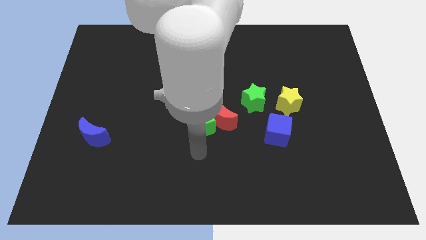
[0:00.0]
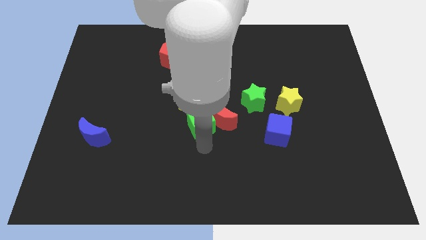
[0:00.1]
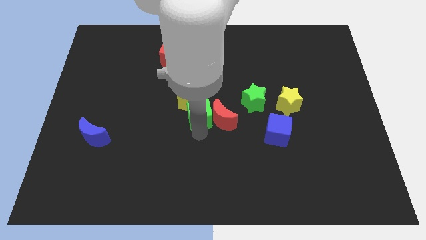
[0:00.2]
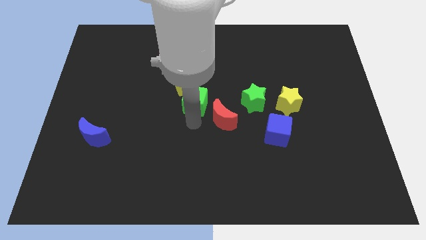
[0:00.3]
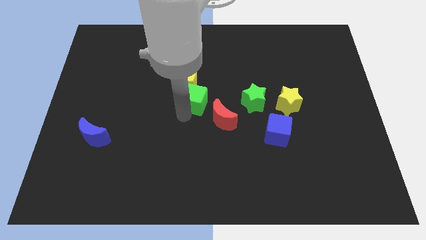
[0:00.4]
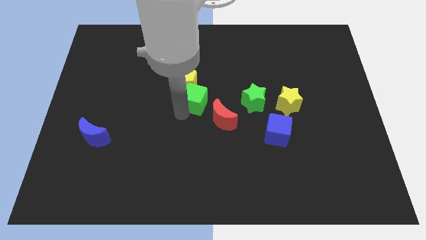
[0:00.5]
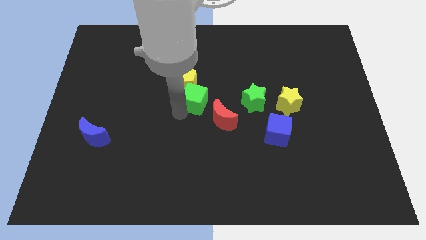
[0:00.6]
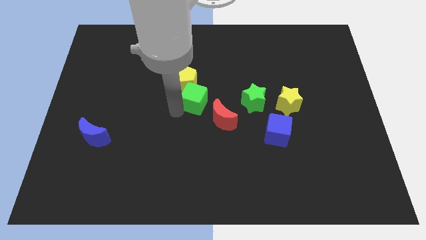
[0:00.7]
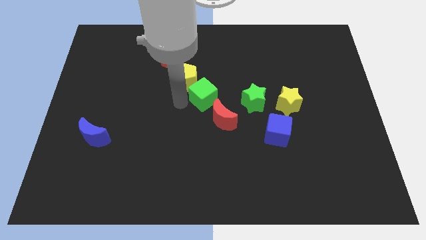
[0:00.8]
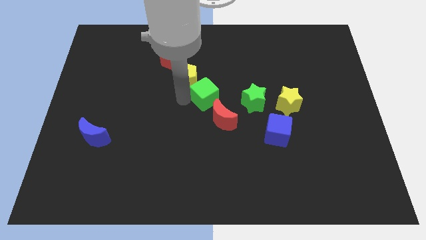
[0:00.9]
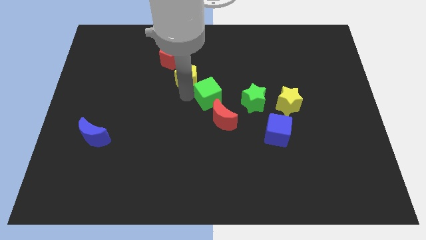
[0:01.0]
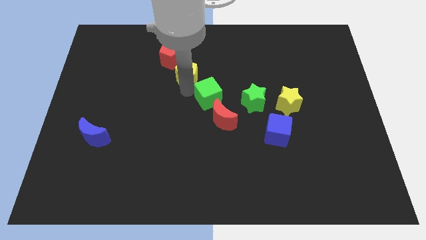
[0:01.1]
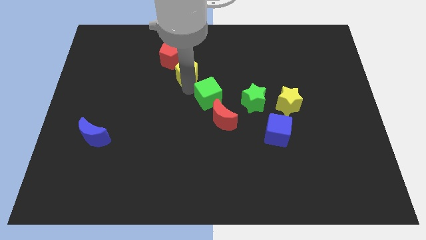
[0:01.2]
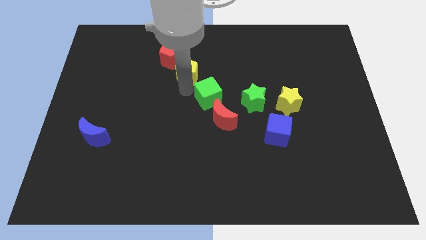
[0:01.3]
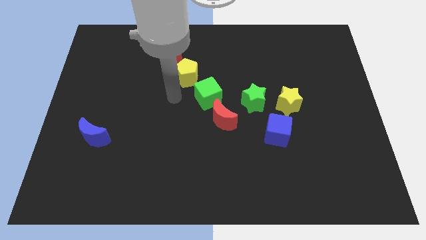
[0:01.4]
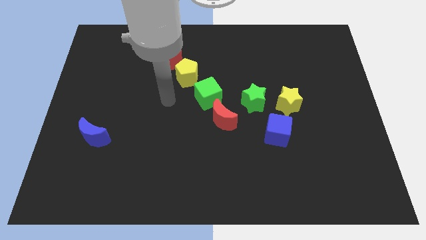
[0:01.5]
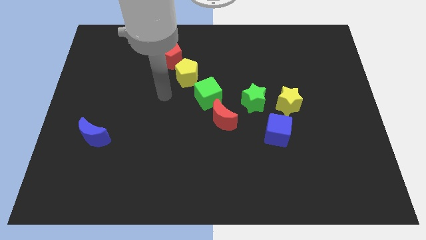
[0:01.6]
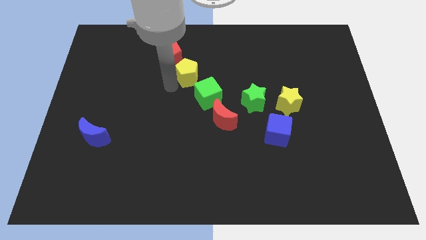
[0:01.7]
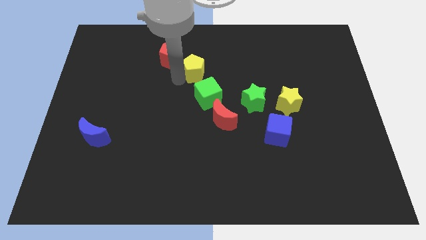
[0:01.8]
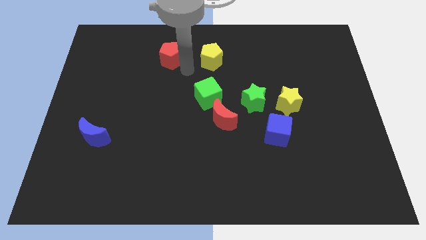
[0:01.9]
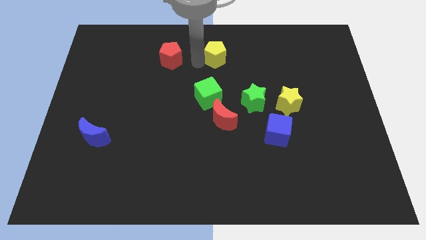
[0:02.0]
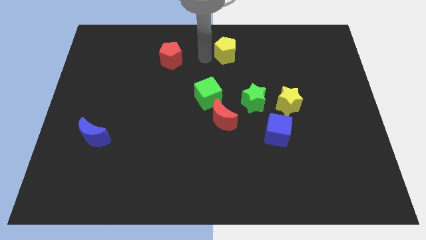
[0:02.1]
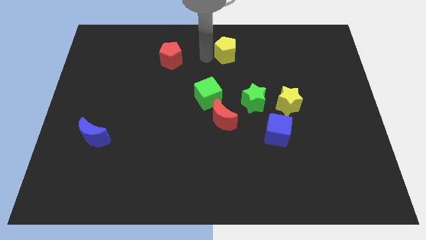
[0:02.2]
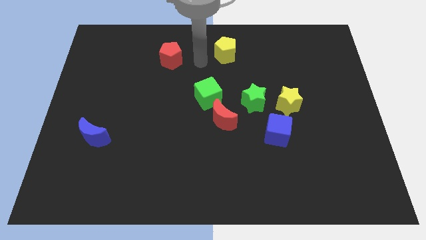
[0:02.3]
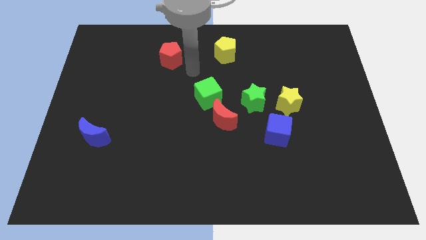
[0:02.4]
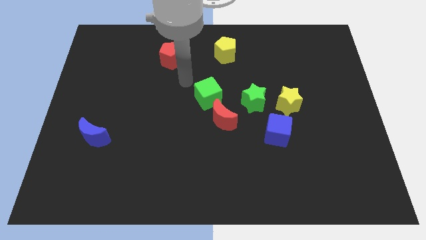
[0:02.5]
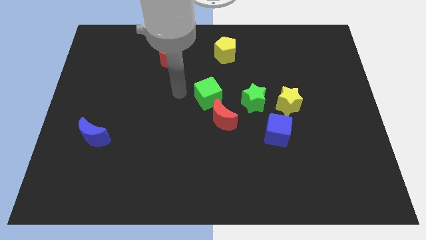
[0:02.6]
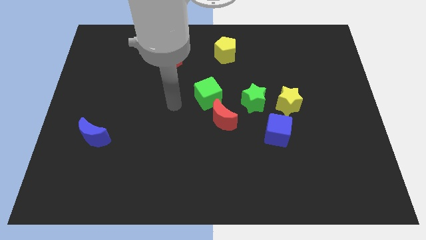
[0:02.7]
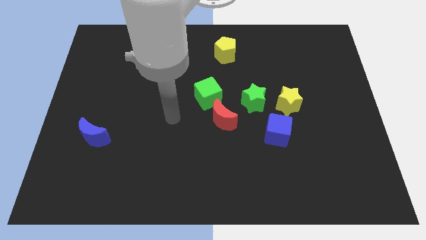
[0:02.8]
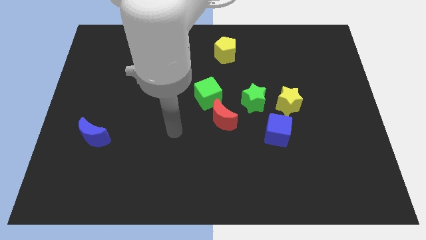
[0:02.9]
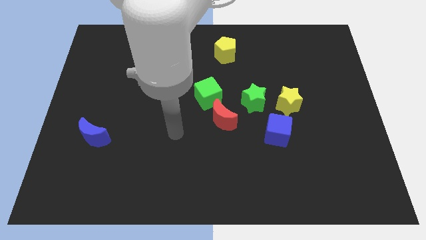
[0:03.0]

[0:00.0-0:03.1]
push the yellow pentagon to the right of the red pentagon

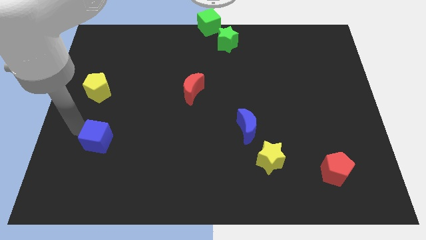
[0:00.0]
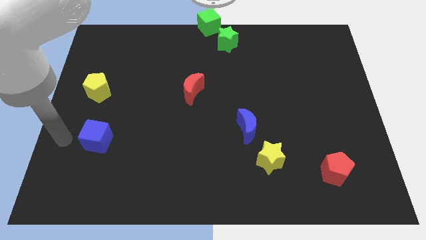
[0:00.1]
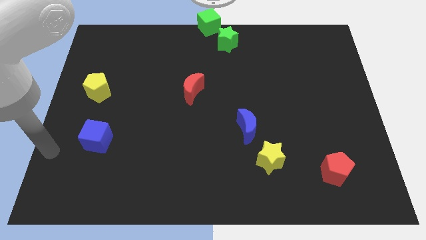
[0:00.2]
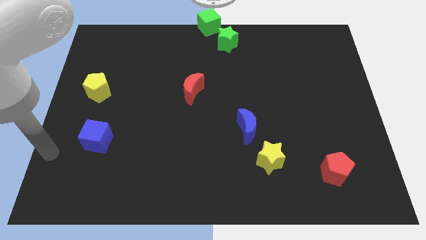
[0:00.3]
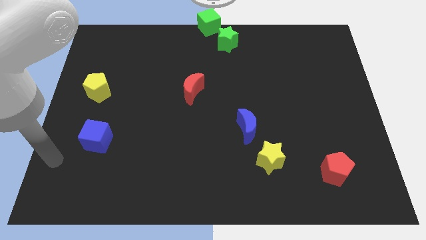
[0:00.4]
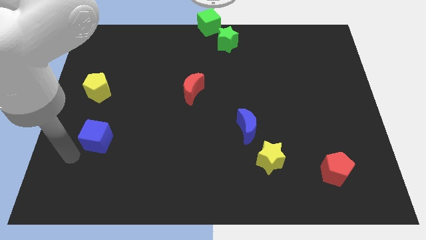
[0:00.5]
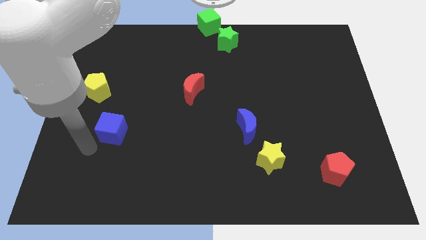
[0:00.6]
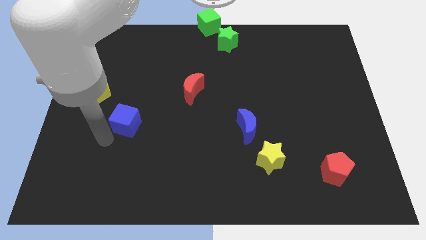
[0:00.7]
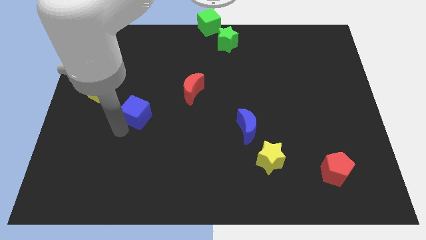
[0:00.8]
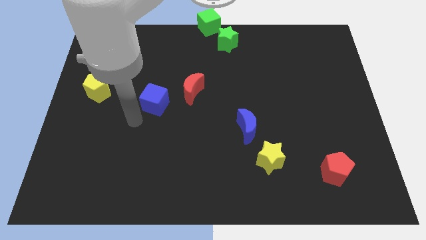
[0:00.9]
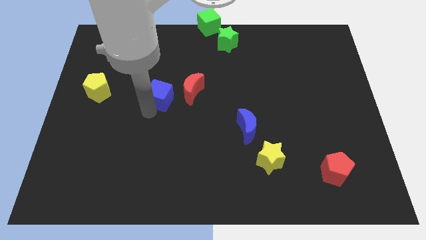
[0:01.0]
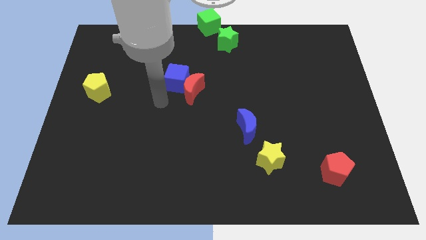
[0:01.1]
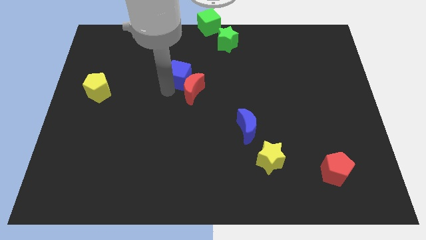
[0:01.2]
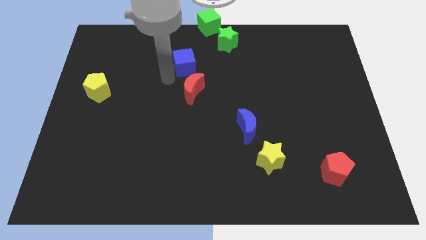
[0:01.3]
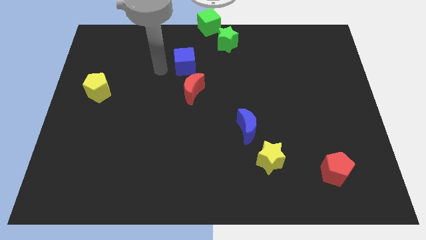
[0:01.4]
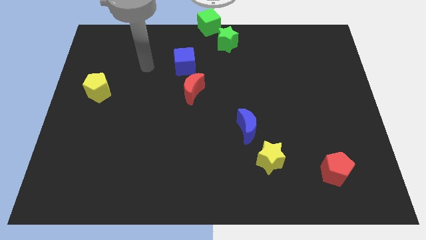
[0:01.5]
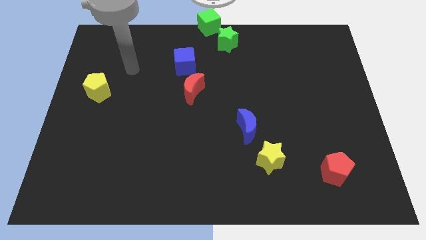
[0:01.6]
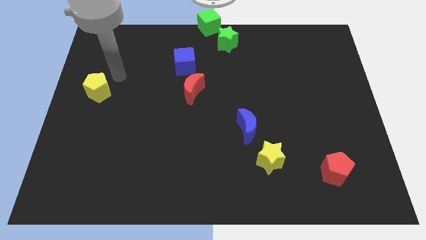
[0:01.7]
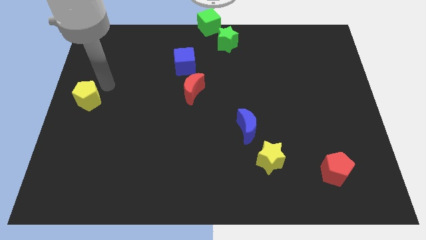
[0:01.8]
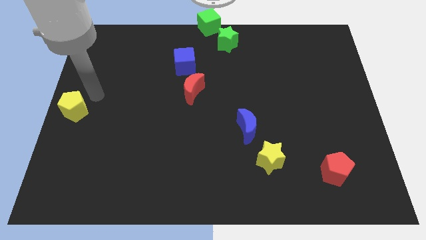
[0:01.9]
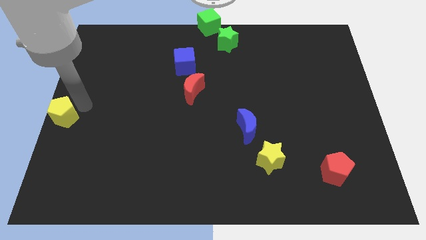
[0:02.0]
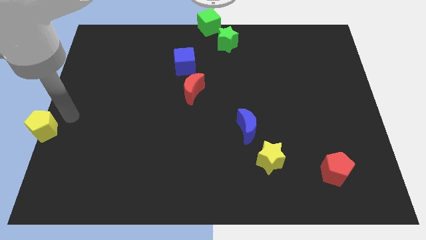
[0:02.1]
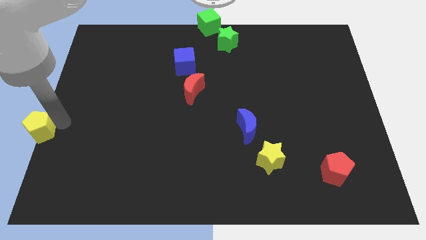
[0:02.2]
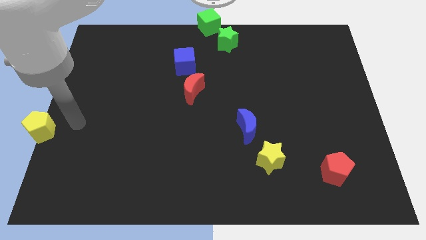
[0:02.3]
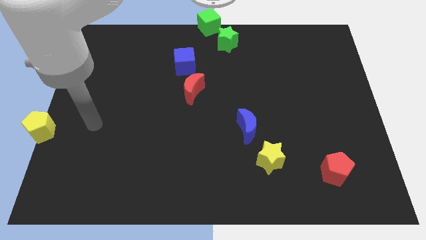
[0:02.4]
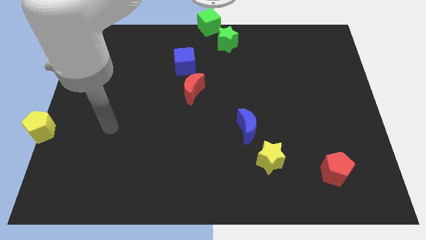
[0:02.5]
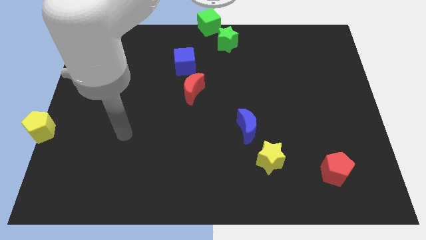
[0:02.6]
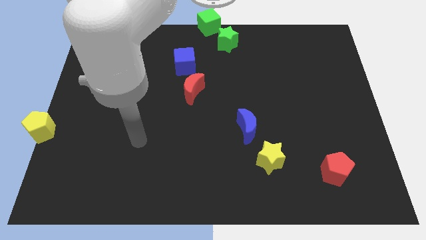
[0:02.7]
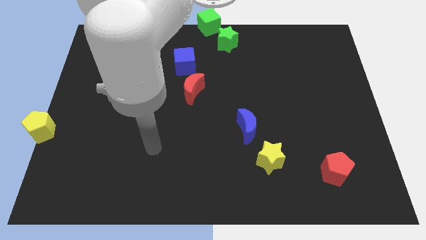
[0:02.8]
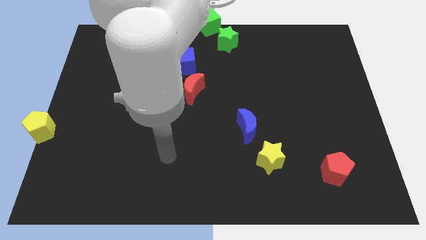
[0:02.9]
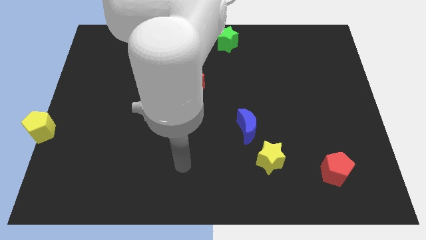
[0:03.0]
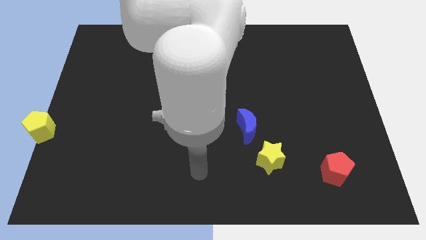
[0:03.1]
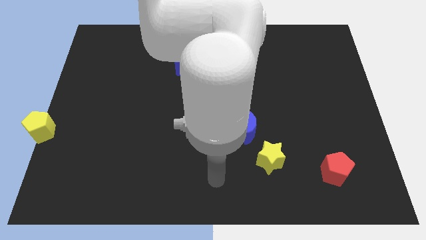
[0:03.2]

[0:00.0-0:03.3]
place the blue cube to the top left of red moon

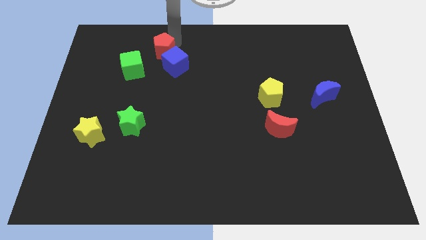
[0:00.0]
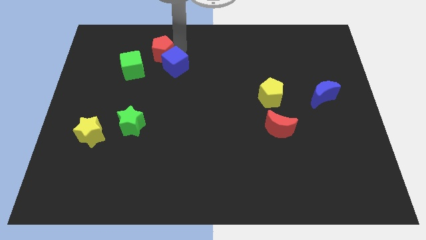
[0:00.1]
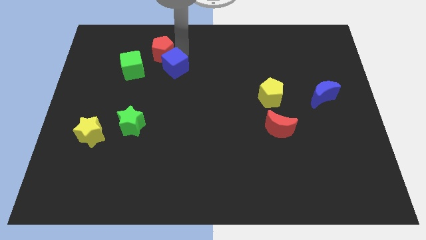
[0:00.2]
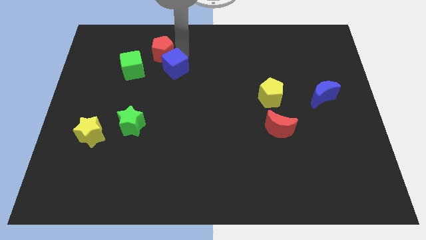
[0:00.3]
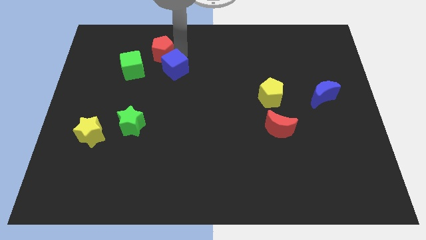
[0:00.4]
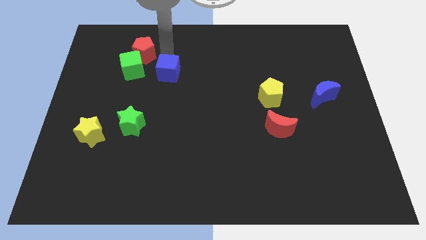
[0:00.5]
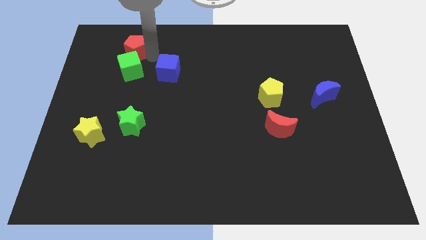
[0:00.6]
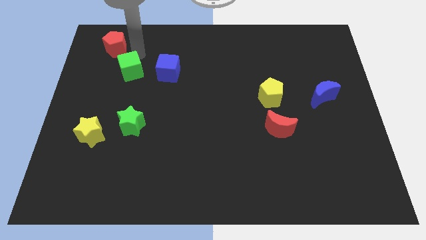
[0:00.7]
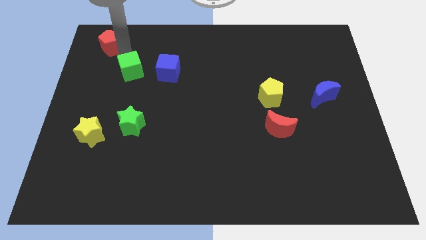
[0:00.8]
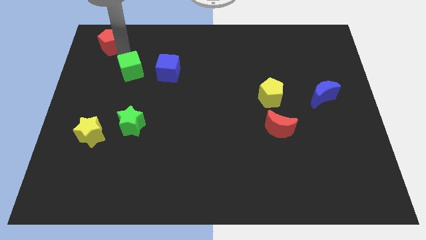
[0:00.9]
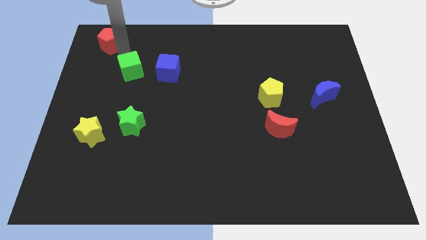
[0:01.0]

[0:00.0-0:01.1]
separate red pentagon and blue cube

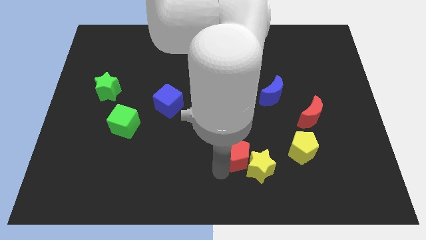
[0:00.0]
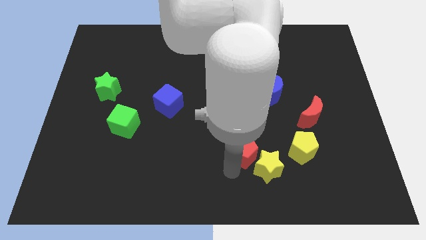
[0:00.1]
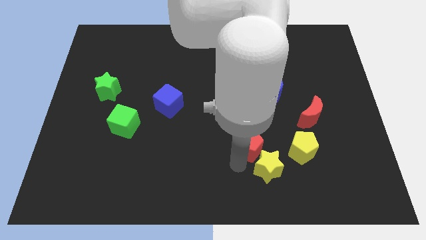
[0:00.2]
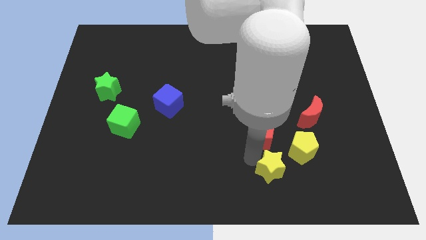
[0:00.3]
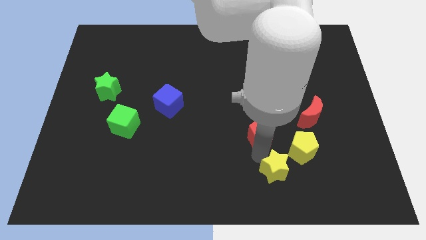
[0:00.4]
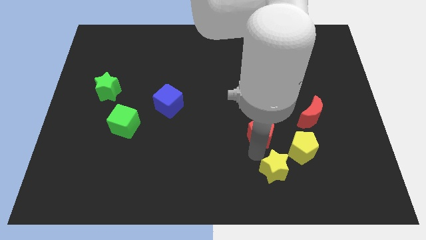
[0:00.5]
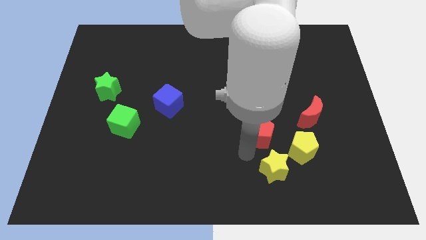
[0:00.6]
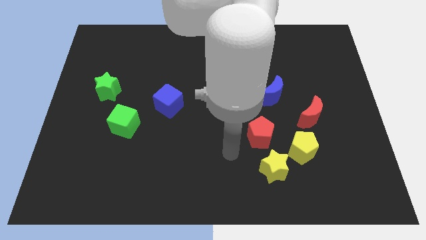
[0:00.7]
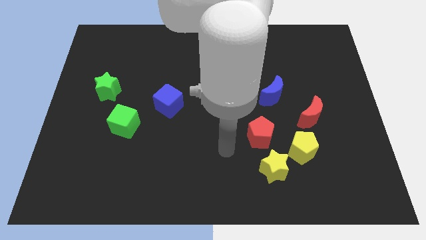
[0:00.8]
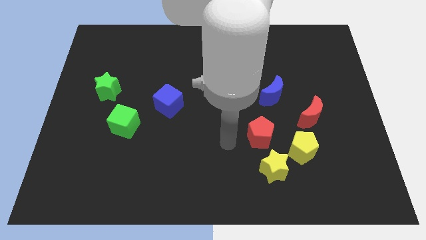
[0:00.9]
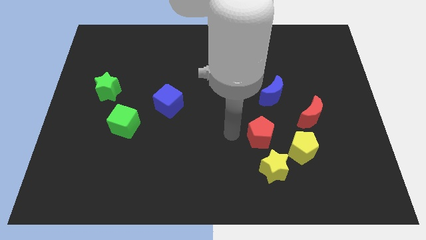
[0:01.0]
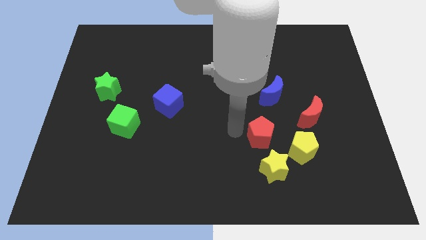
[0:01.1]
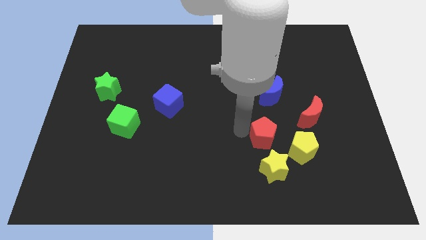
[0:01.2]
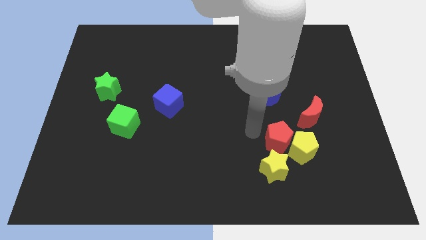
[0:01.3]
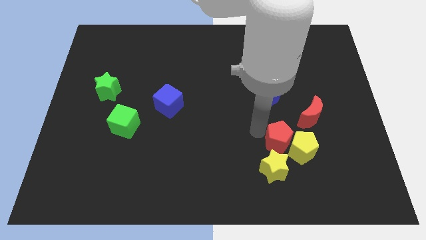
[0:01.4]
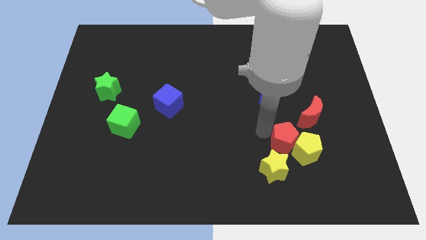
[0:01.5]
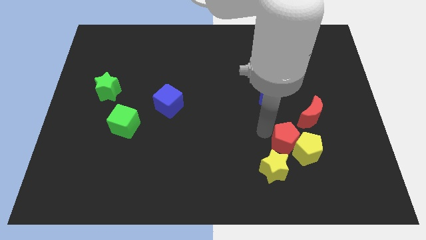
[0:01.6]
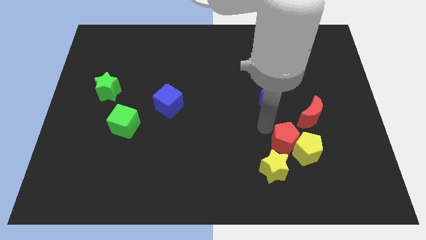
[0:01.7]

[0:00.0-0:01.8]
slide the red pentagon into the yellow pentagon
